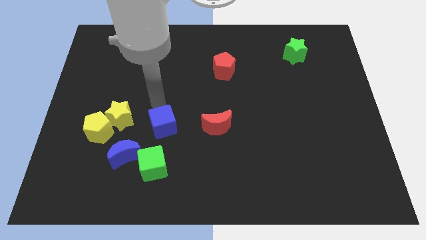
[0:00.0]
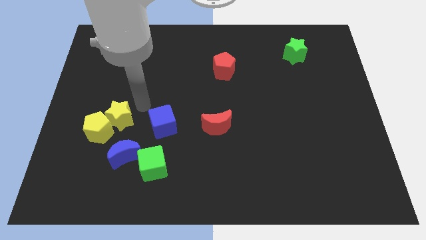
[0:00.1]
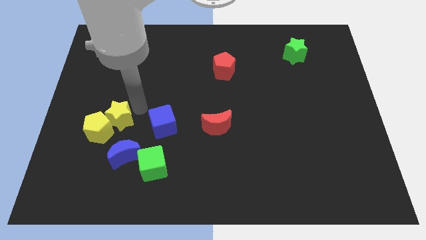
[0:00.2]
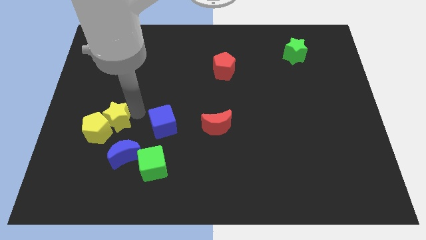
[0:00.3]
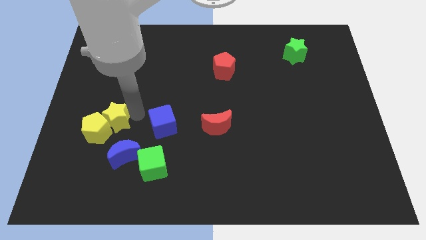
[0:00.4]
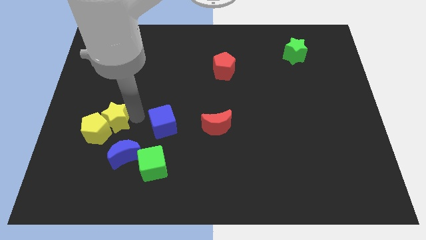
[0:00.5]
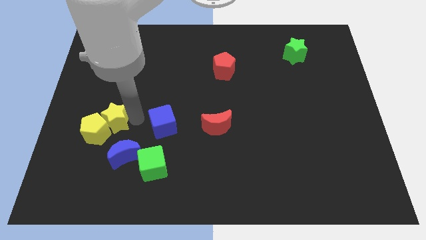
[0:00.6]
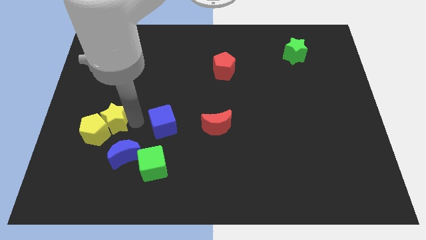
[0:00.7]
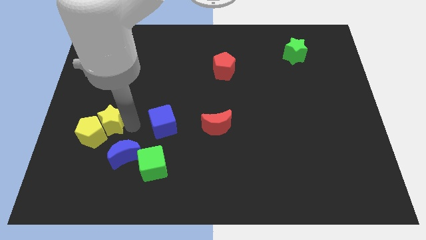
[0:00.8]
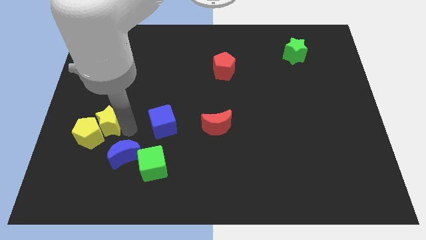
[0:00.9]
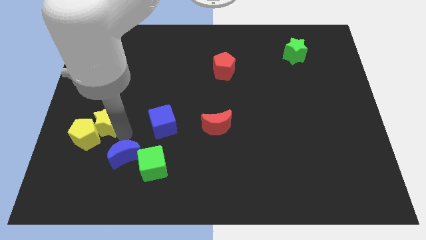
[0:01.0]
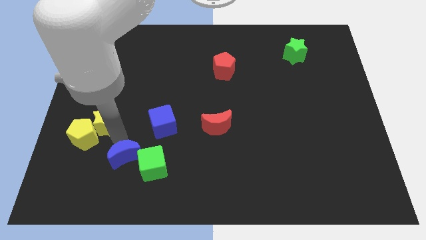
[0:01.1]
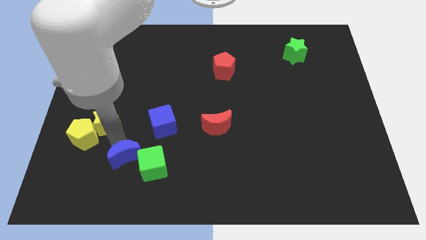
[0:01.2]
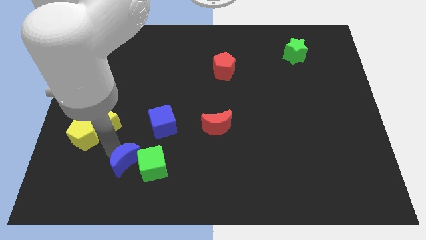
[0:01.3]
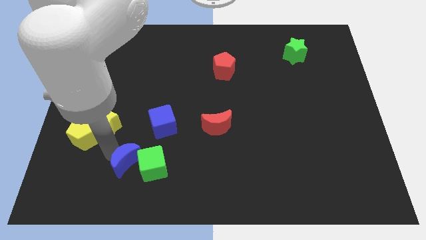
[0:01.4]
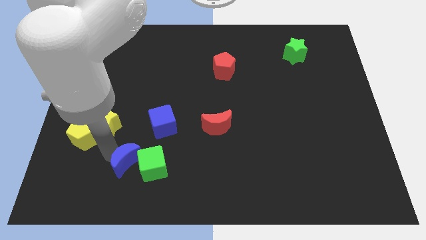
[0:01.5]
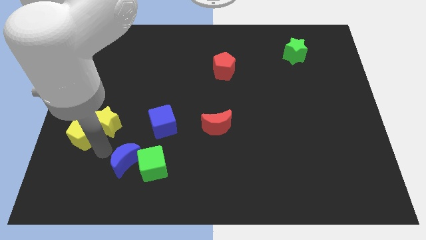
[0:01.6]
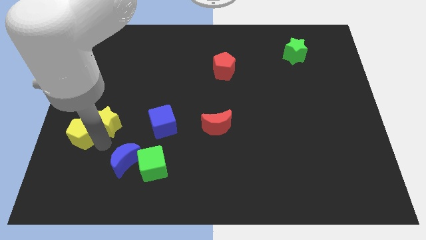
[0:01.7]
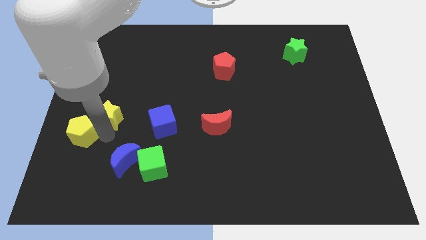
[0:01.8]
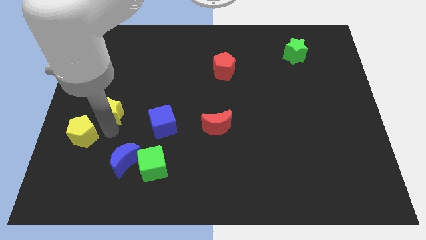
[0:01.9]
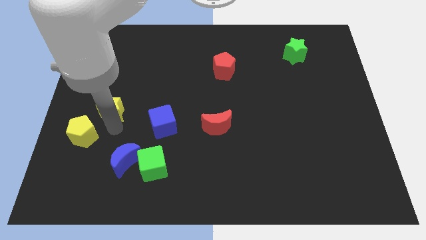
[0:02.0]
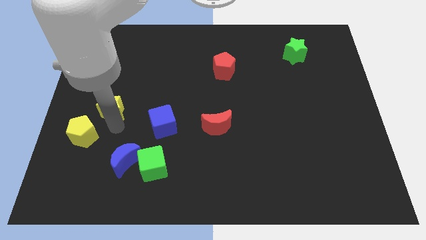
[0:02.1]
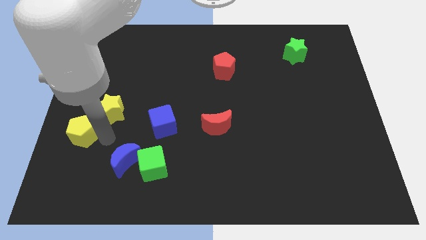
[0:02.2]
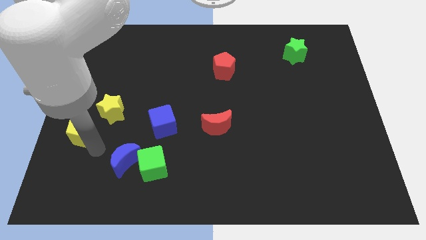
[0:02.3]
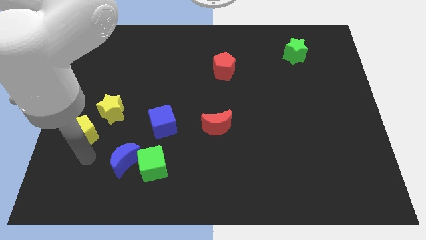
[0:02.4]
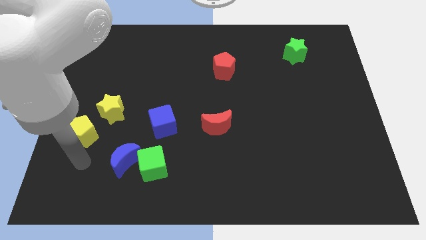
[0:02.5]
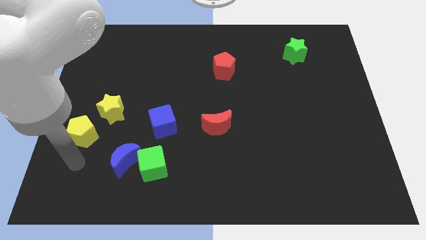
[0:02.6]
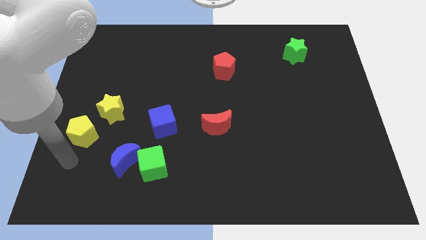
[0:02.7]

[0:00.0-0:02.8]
slightly push yellow star yellow pentagon blue square

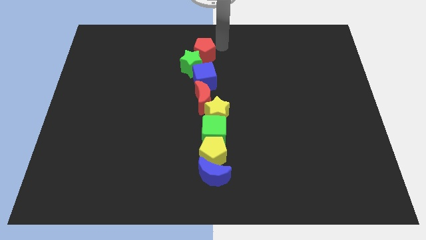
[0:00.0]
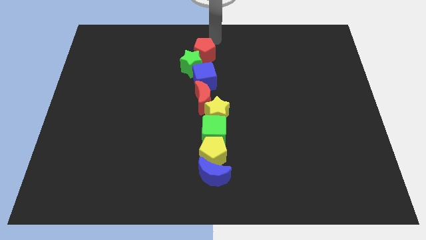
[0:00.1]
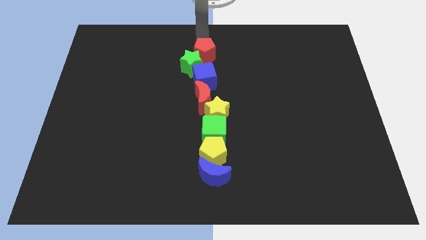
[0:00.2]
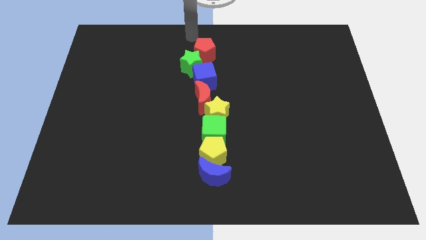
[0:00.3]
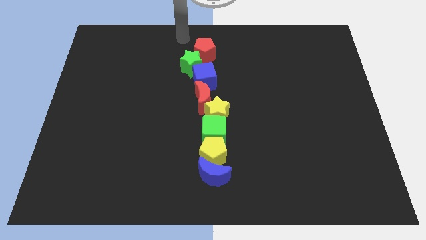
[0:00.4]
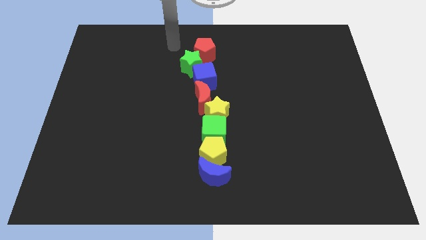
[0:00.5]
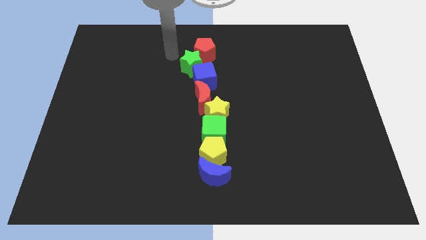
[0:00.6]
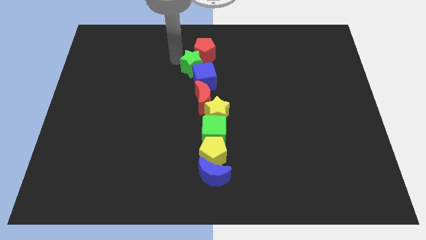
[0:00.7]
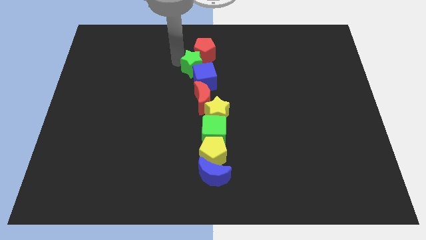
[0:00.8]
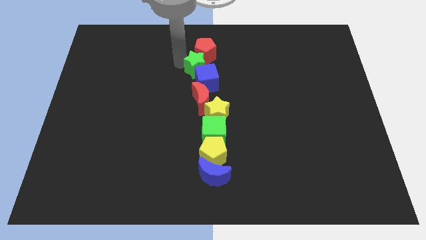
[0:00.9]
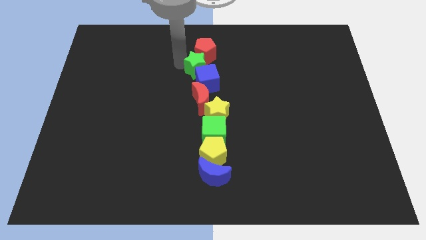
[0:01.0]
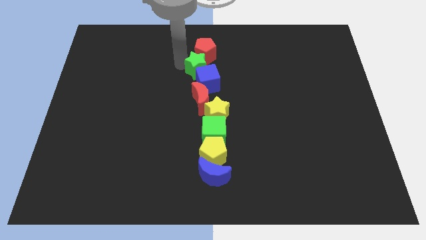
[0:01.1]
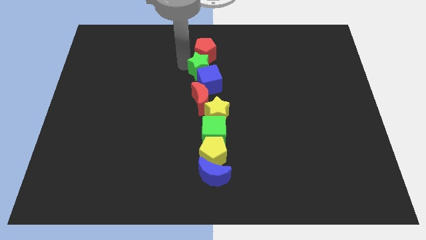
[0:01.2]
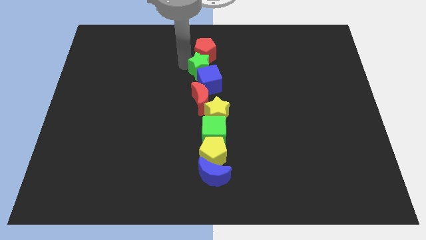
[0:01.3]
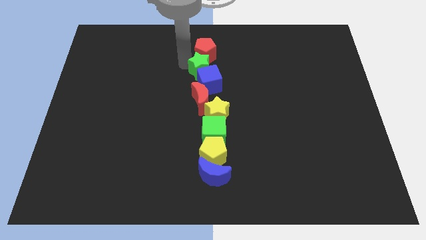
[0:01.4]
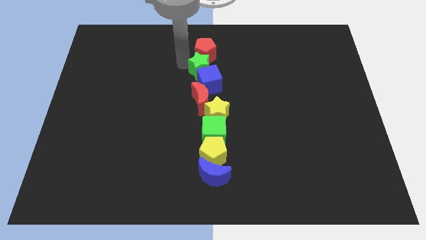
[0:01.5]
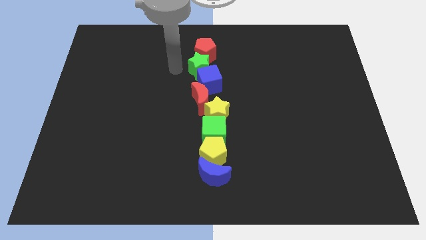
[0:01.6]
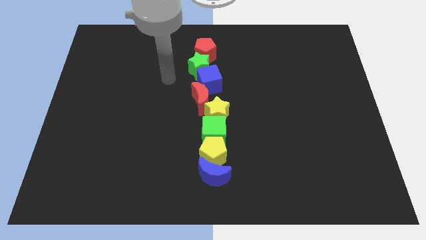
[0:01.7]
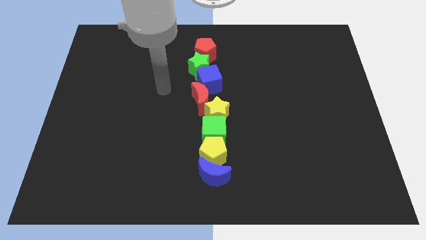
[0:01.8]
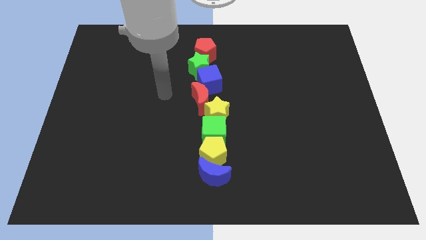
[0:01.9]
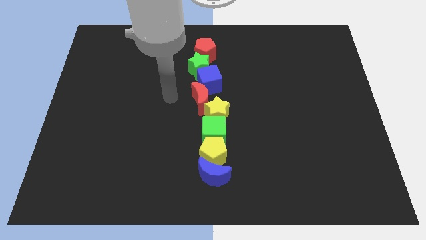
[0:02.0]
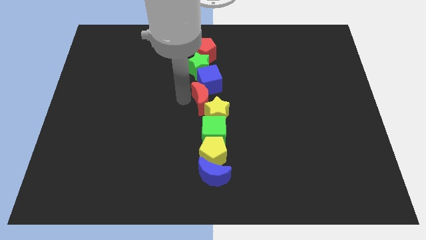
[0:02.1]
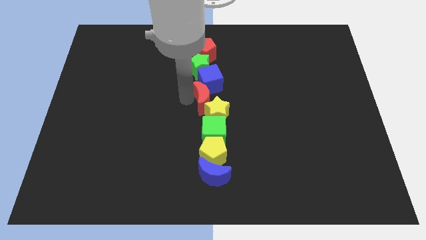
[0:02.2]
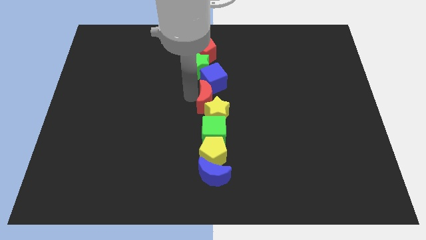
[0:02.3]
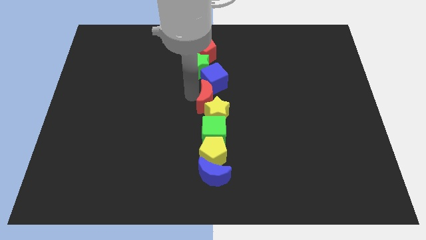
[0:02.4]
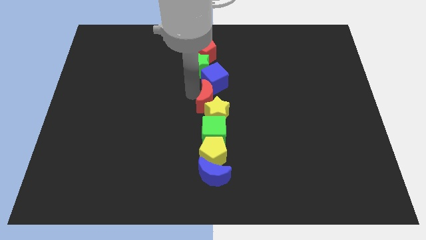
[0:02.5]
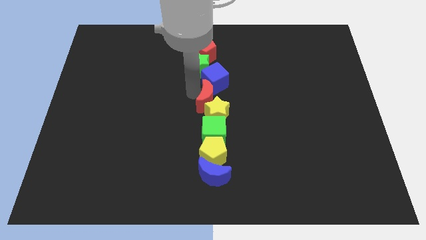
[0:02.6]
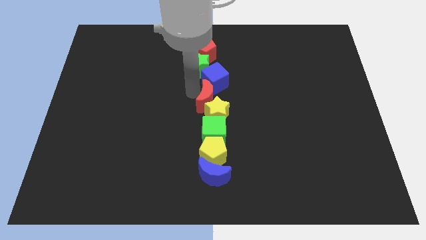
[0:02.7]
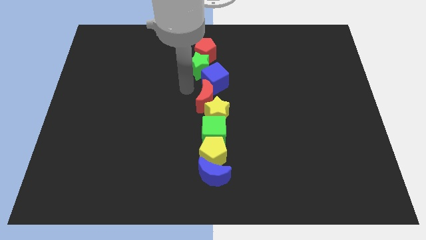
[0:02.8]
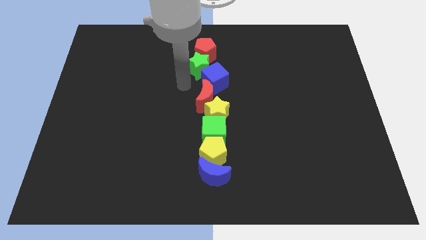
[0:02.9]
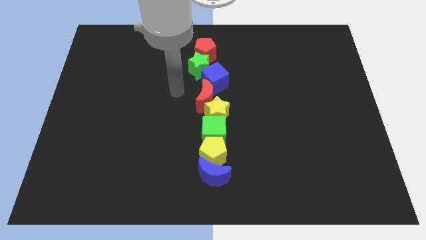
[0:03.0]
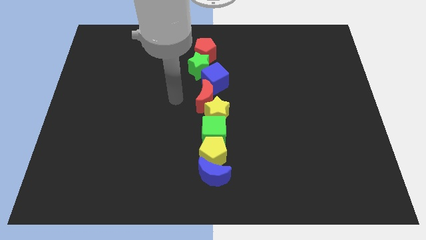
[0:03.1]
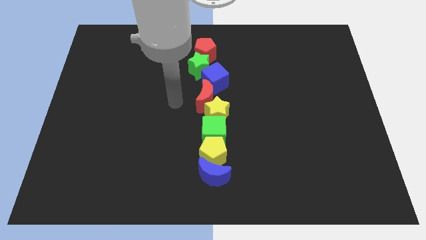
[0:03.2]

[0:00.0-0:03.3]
slightly touch left to the red moon

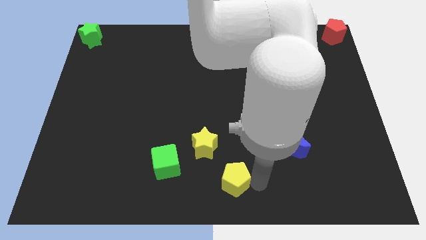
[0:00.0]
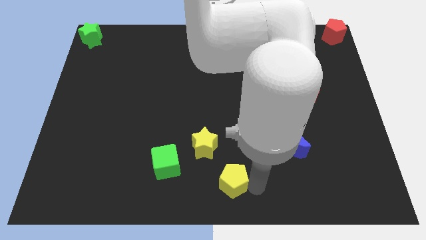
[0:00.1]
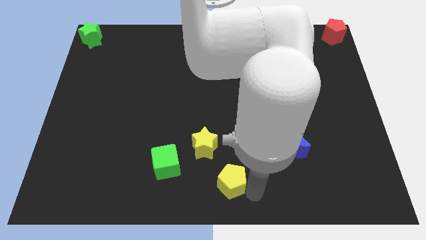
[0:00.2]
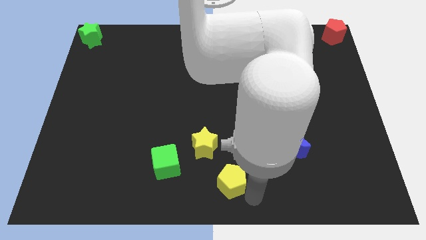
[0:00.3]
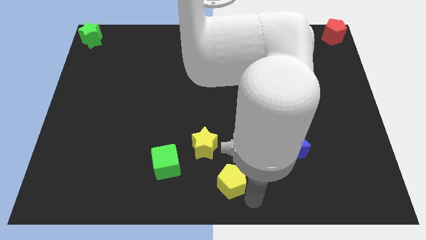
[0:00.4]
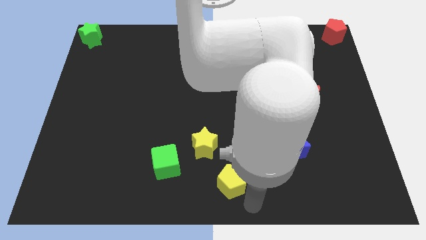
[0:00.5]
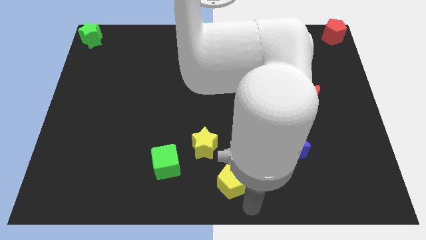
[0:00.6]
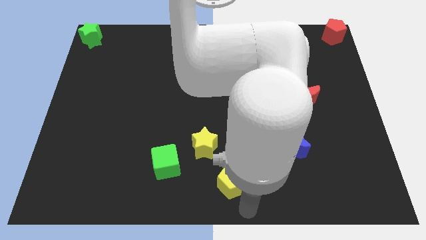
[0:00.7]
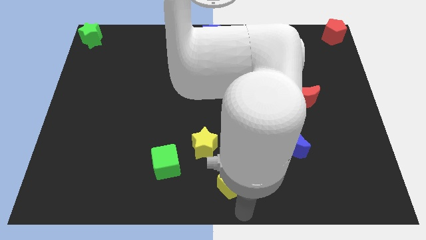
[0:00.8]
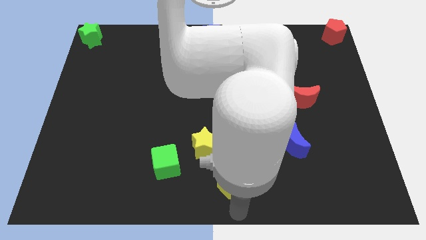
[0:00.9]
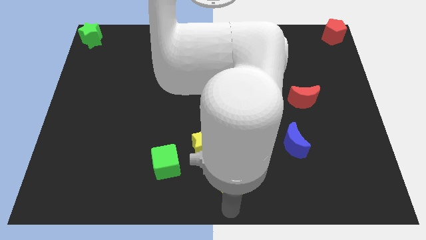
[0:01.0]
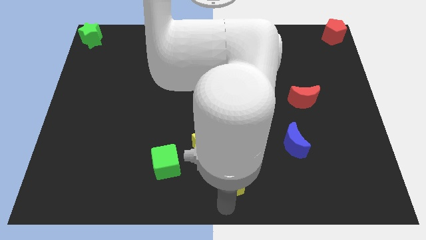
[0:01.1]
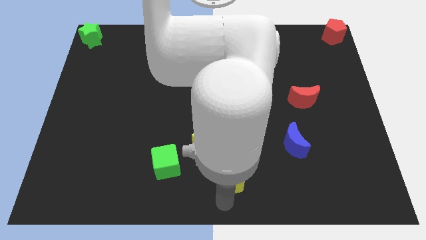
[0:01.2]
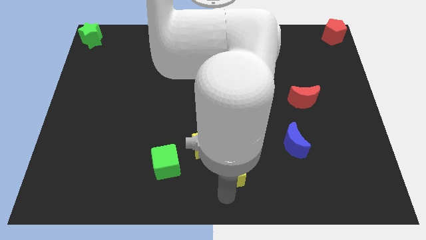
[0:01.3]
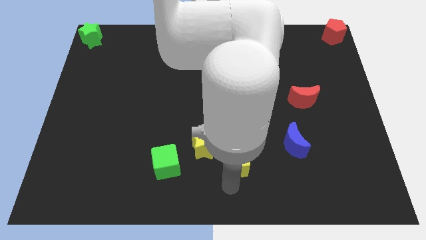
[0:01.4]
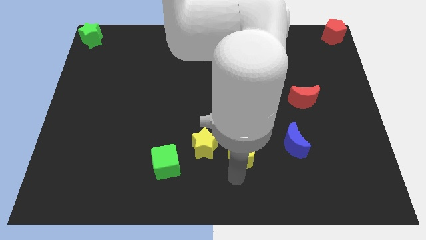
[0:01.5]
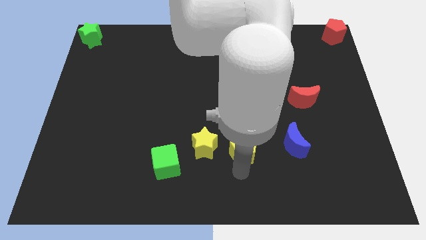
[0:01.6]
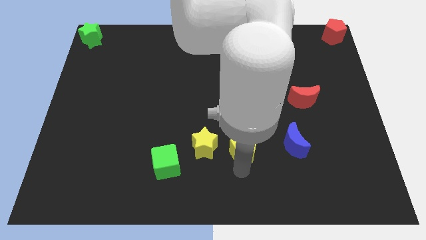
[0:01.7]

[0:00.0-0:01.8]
place the yellow pentagon right to the yellow star

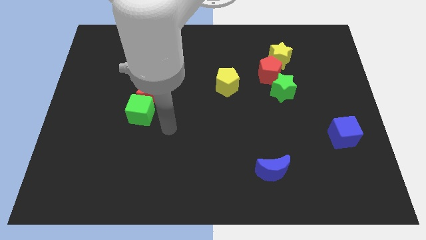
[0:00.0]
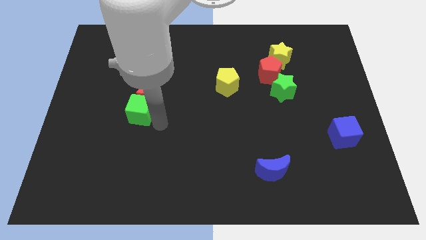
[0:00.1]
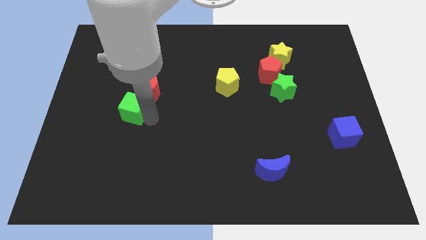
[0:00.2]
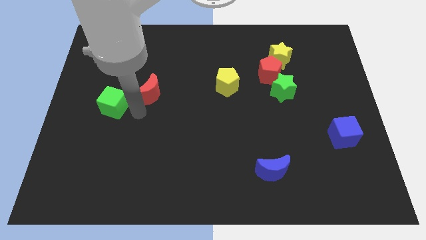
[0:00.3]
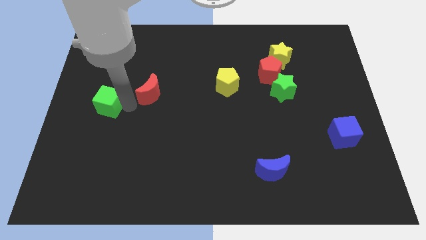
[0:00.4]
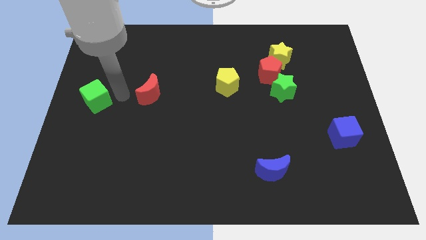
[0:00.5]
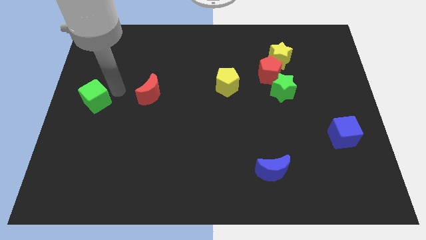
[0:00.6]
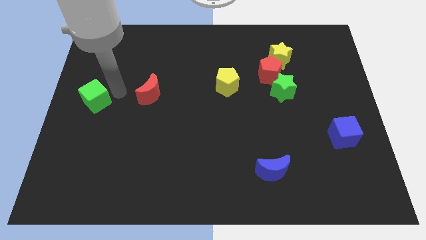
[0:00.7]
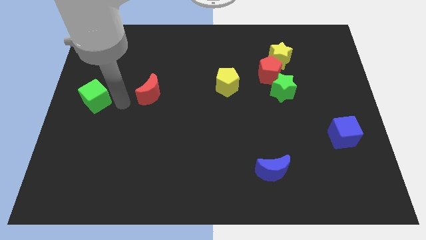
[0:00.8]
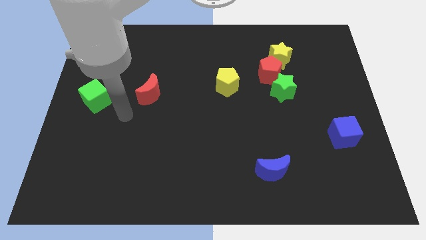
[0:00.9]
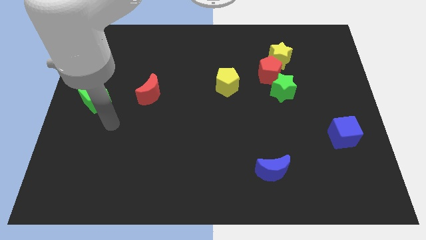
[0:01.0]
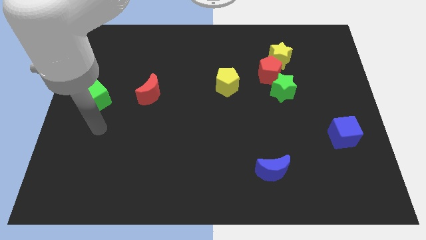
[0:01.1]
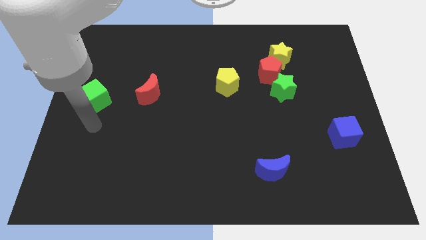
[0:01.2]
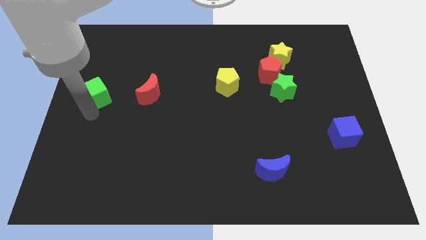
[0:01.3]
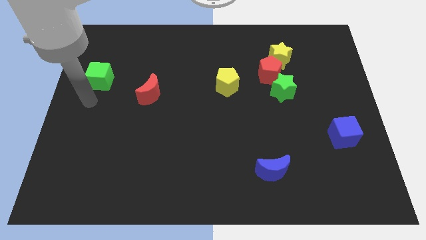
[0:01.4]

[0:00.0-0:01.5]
push green cube beside red crescent
